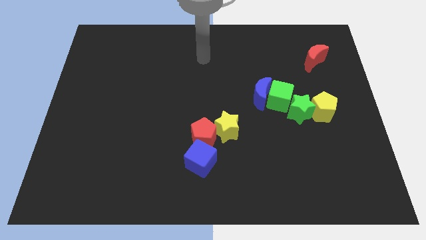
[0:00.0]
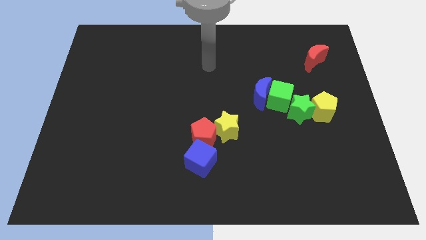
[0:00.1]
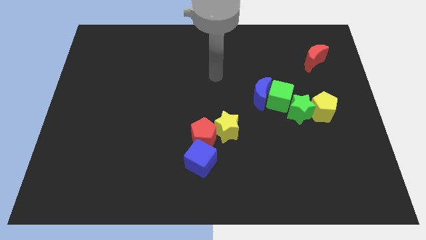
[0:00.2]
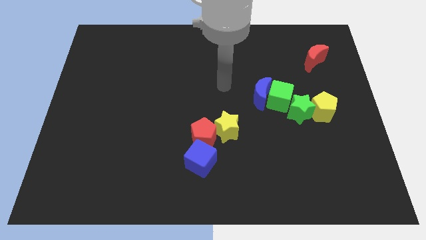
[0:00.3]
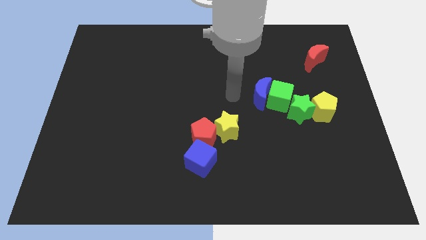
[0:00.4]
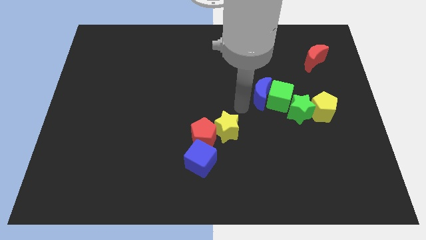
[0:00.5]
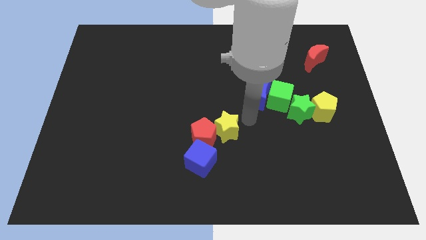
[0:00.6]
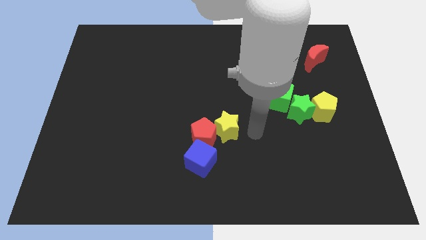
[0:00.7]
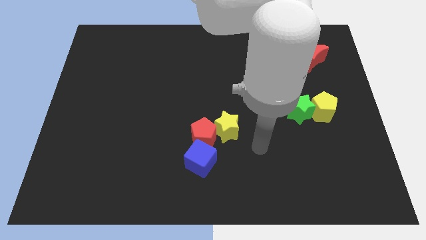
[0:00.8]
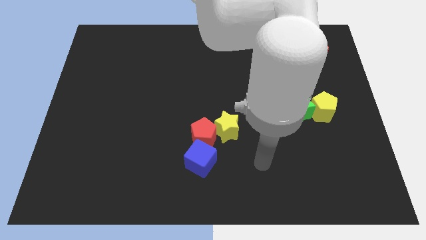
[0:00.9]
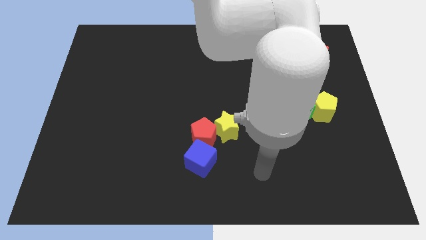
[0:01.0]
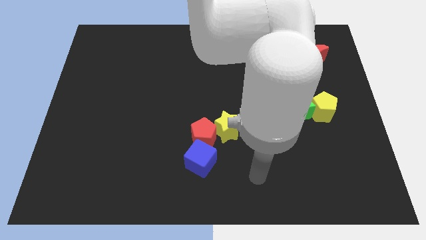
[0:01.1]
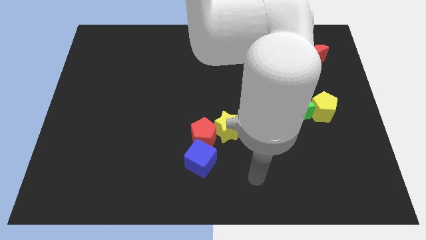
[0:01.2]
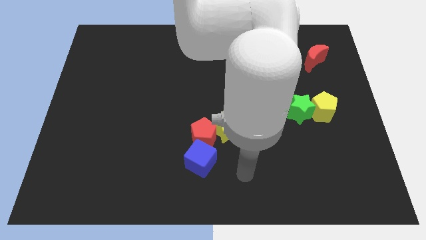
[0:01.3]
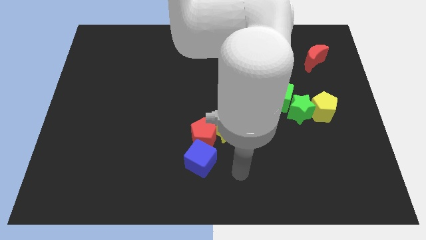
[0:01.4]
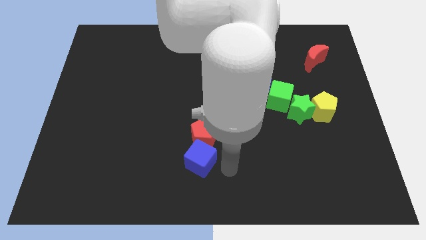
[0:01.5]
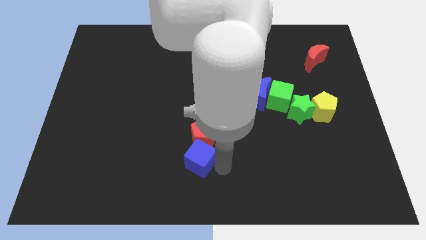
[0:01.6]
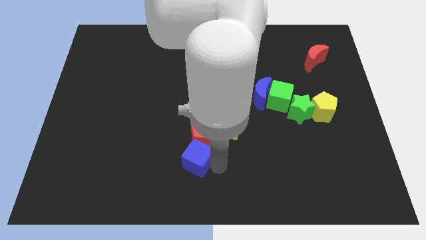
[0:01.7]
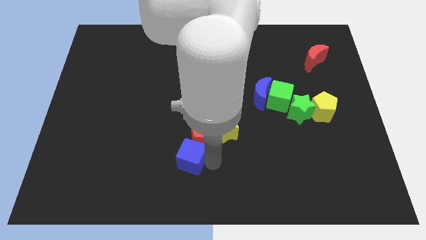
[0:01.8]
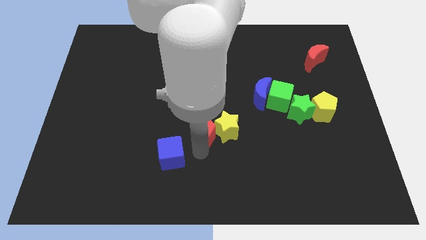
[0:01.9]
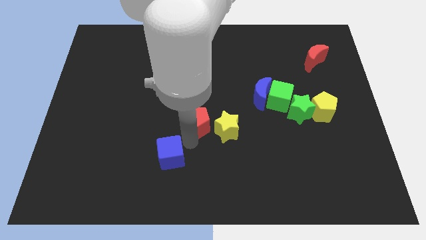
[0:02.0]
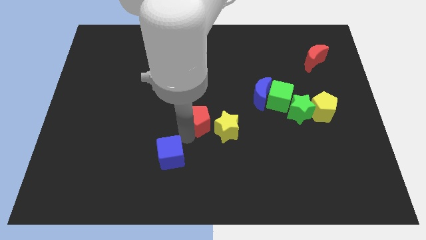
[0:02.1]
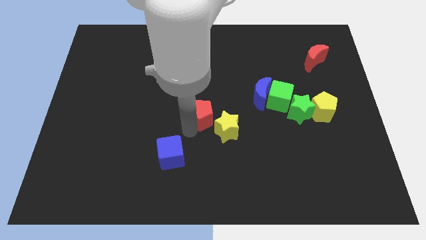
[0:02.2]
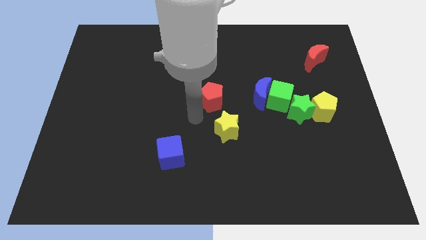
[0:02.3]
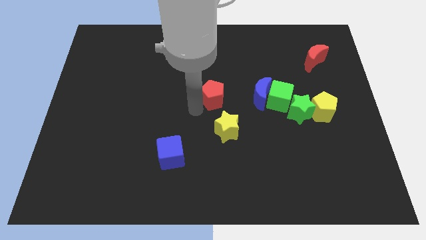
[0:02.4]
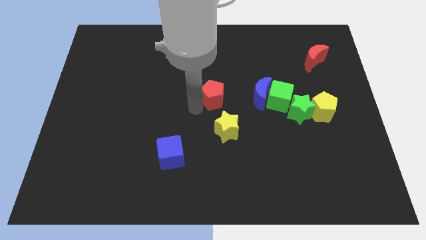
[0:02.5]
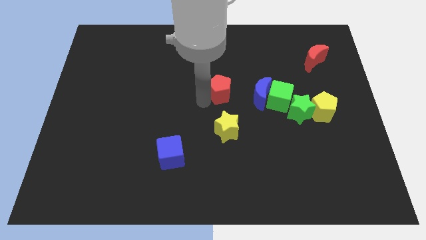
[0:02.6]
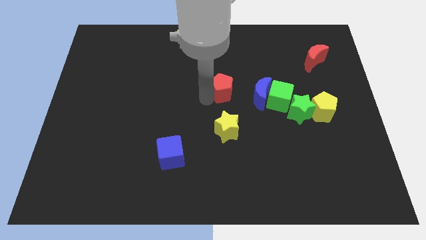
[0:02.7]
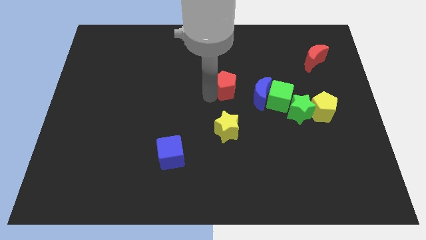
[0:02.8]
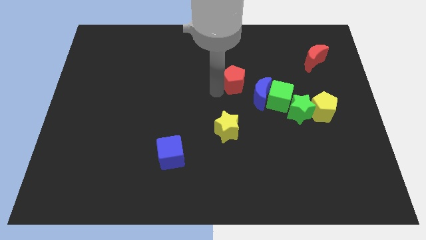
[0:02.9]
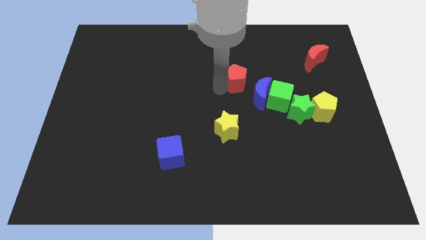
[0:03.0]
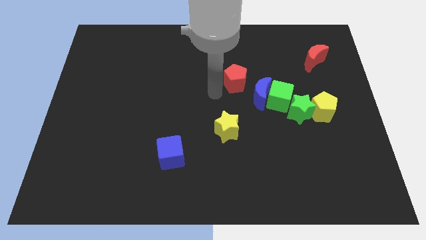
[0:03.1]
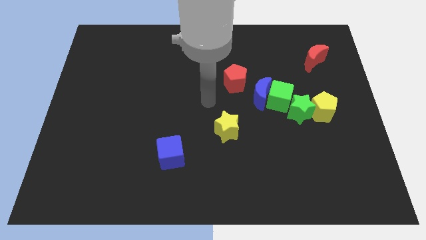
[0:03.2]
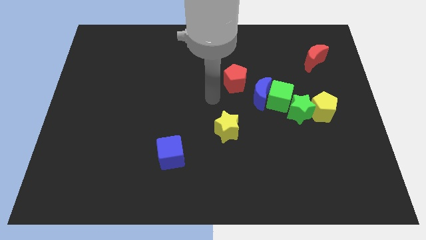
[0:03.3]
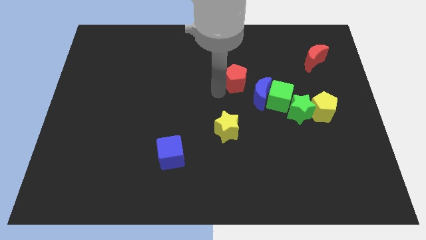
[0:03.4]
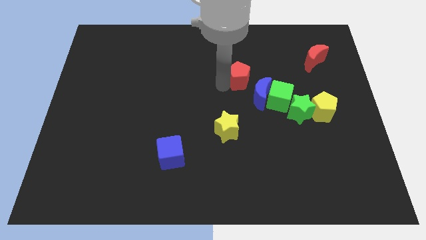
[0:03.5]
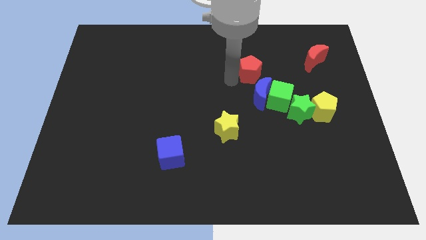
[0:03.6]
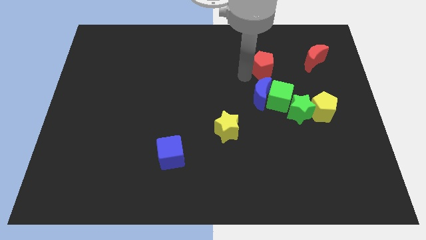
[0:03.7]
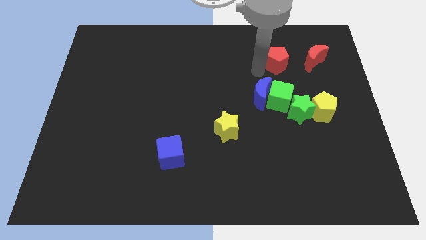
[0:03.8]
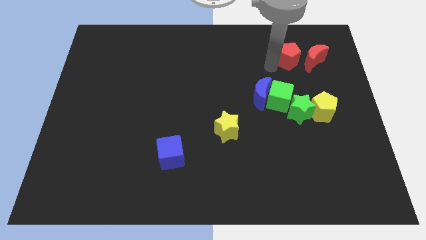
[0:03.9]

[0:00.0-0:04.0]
place the red pentagon above the green cube

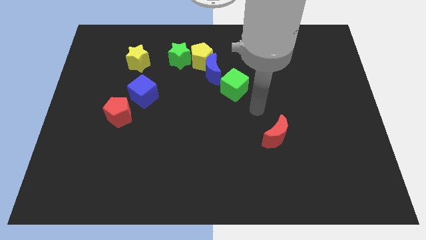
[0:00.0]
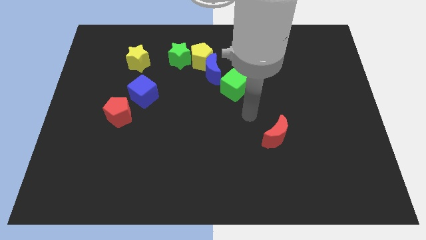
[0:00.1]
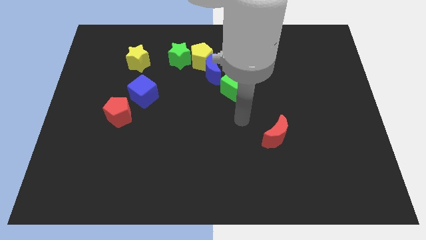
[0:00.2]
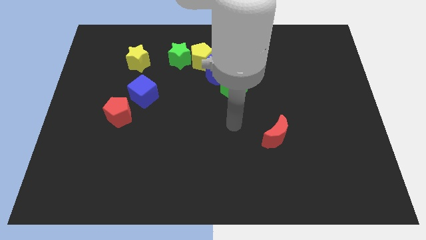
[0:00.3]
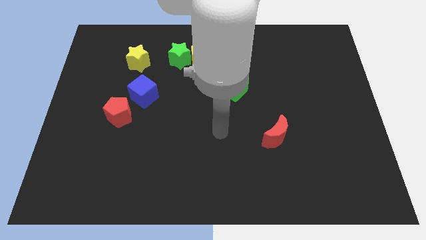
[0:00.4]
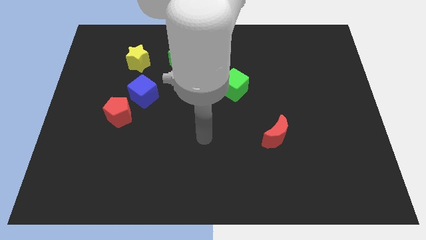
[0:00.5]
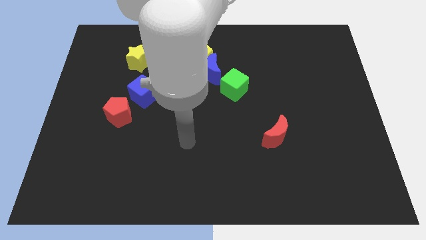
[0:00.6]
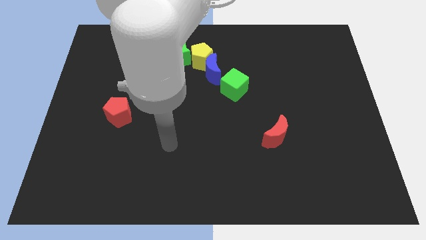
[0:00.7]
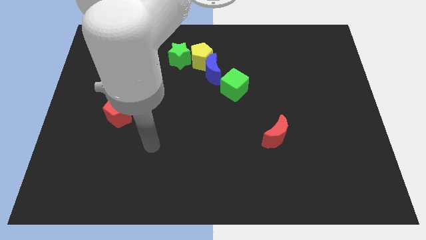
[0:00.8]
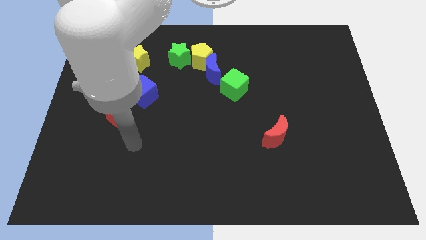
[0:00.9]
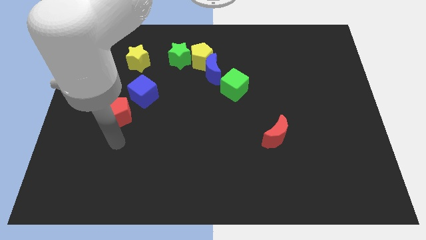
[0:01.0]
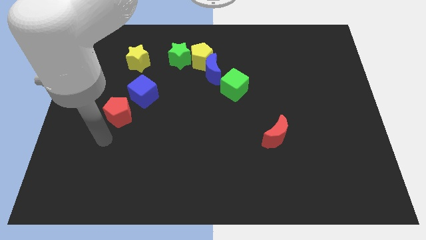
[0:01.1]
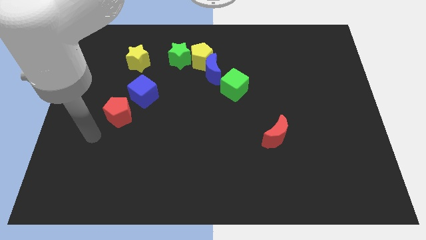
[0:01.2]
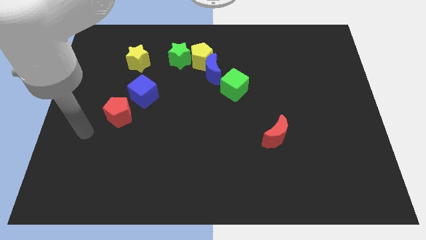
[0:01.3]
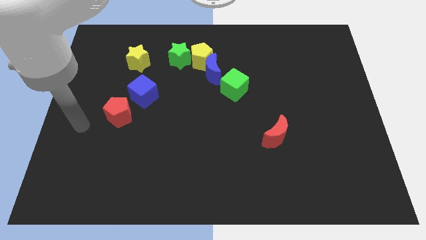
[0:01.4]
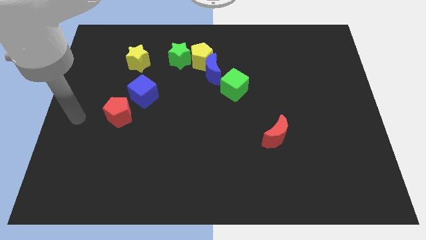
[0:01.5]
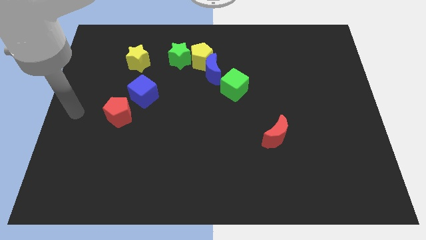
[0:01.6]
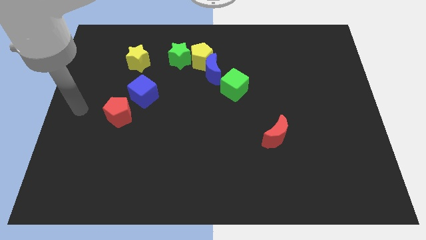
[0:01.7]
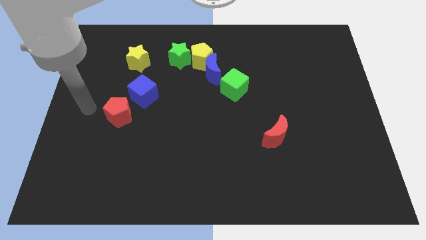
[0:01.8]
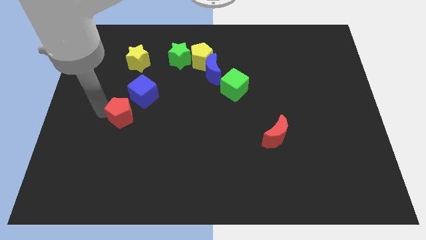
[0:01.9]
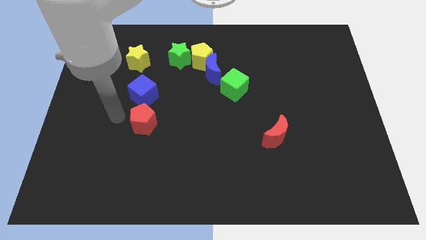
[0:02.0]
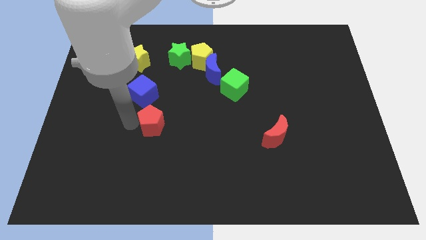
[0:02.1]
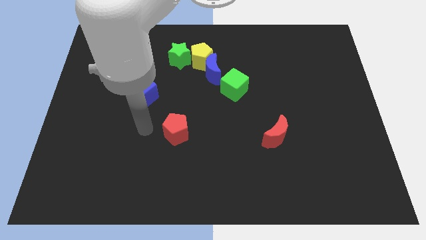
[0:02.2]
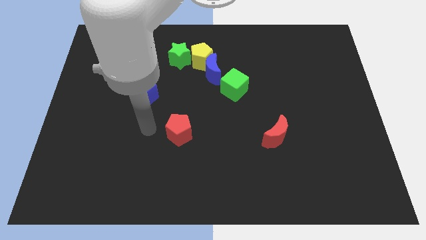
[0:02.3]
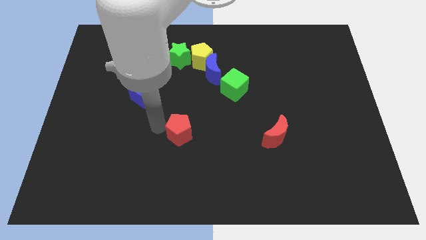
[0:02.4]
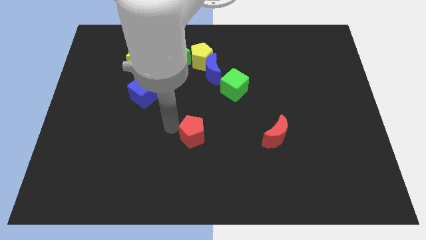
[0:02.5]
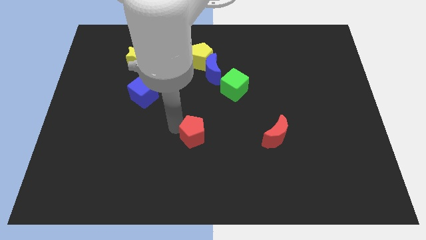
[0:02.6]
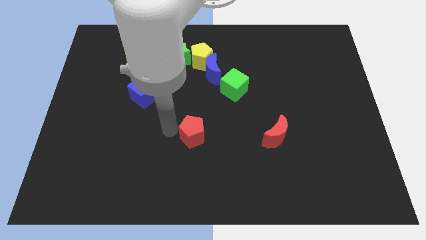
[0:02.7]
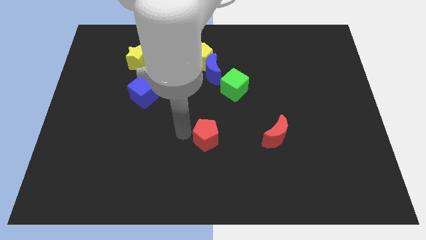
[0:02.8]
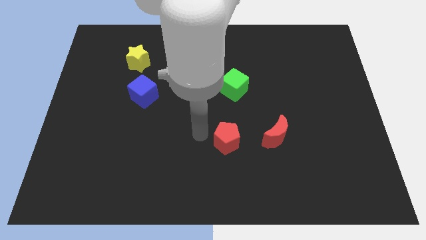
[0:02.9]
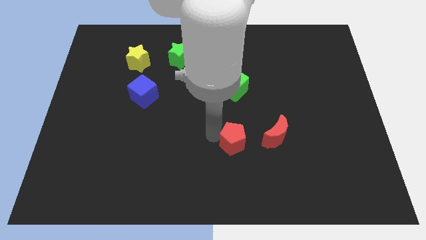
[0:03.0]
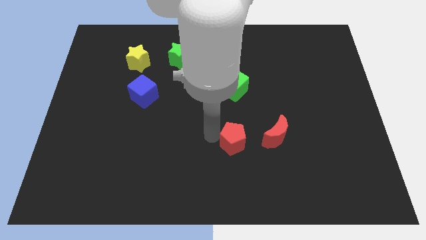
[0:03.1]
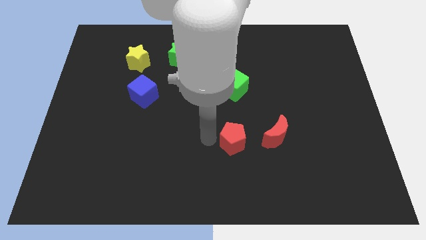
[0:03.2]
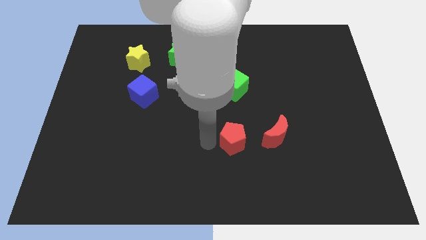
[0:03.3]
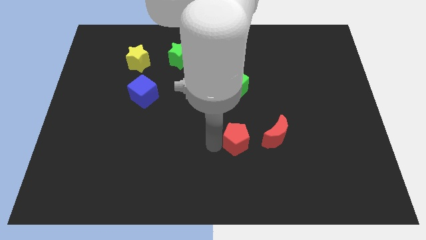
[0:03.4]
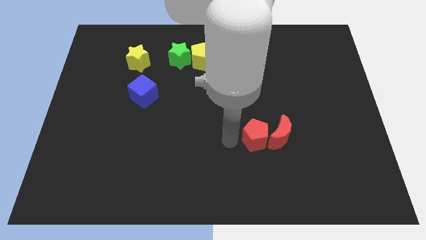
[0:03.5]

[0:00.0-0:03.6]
move red pentagon into the red crescent

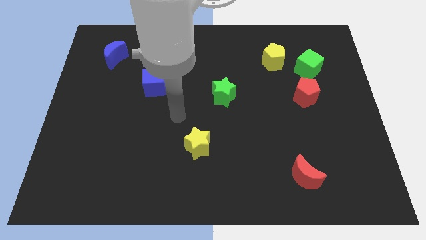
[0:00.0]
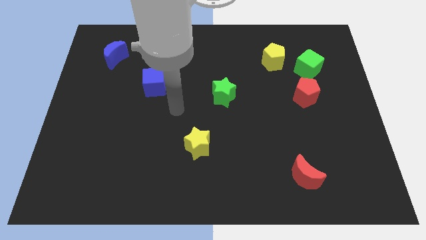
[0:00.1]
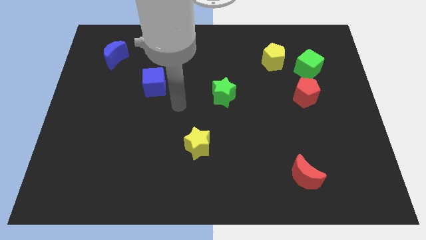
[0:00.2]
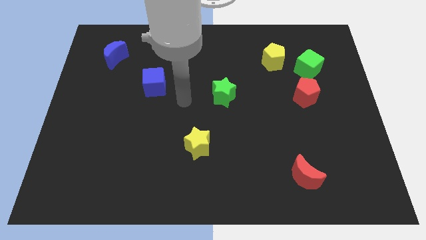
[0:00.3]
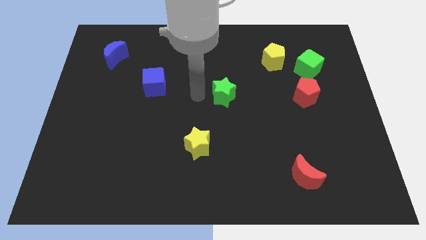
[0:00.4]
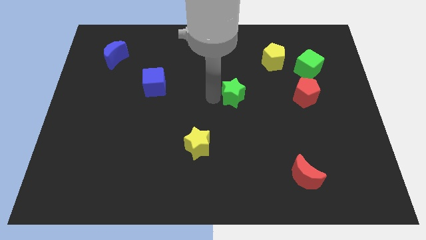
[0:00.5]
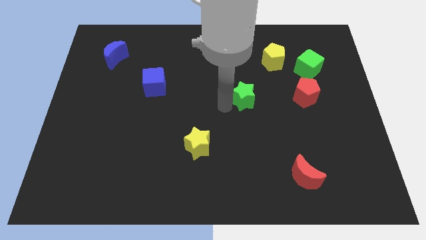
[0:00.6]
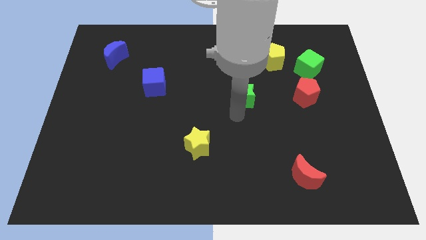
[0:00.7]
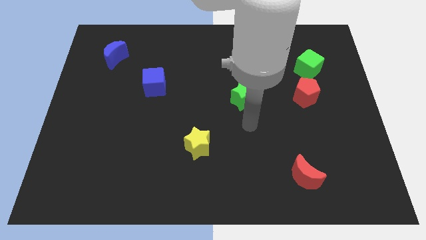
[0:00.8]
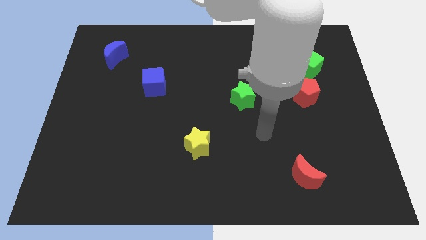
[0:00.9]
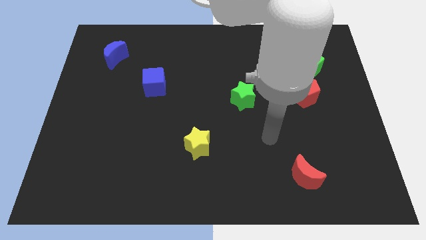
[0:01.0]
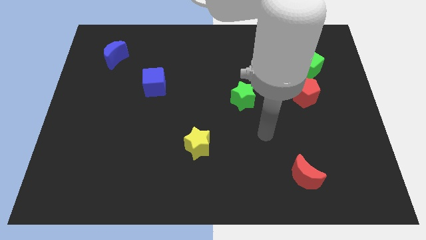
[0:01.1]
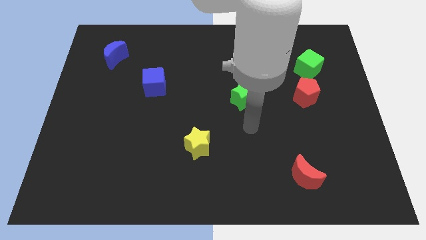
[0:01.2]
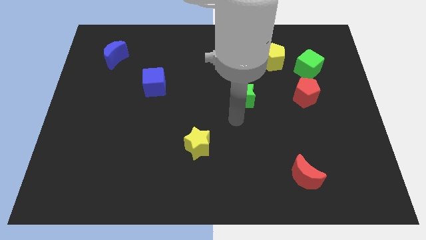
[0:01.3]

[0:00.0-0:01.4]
place the green star parallel to red pentagon
